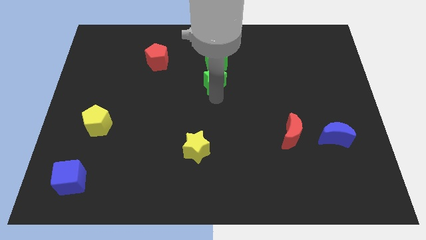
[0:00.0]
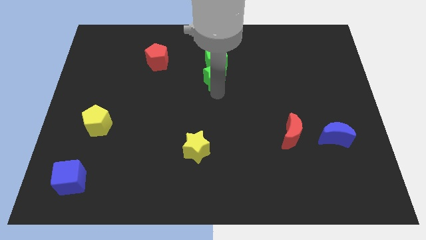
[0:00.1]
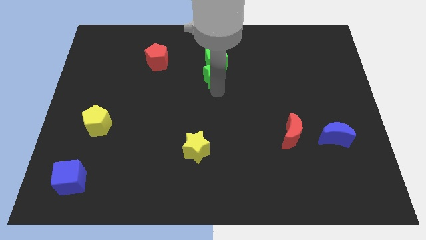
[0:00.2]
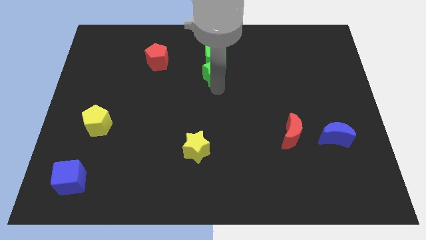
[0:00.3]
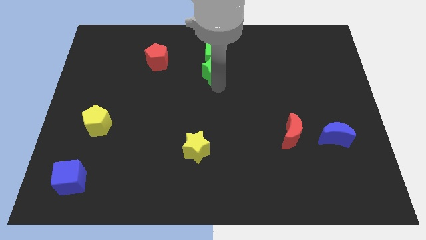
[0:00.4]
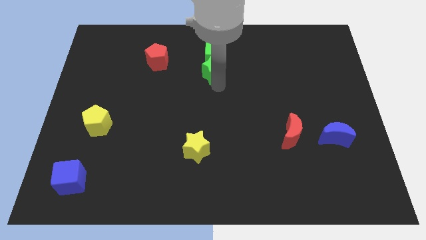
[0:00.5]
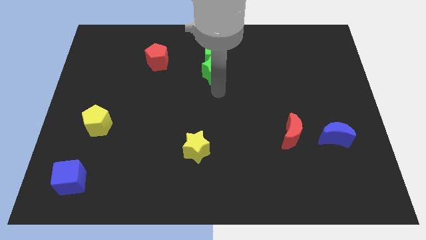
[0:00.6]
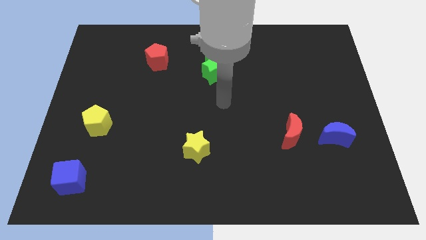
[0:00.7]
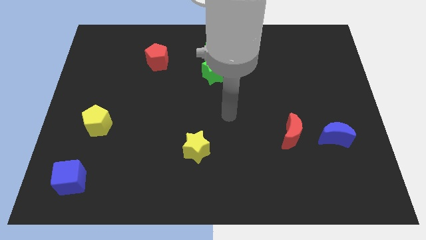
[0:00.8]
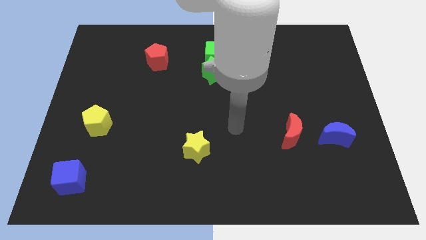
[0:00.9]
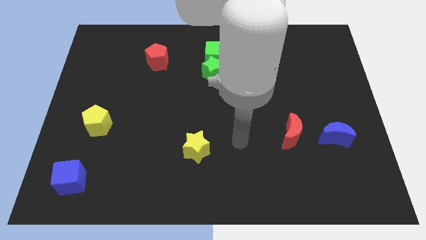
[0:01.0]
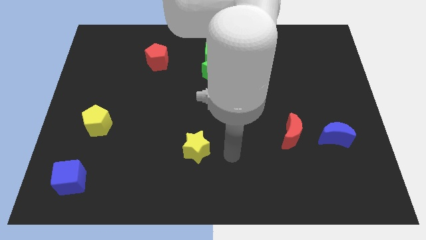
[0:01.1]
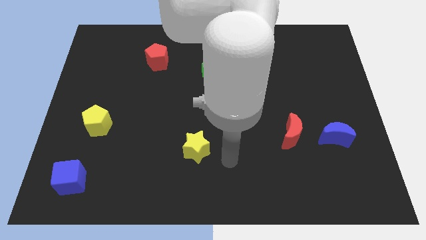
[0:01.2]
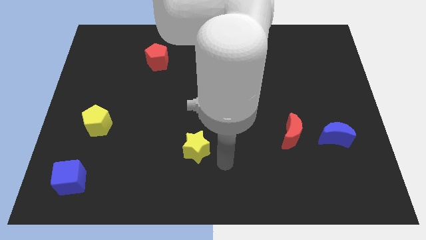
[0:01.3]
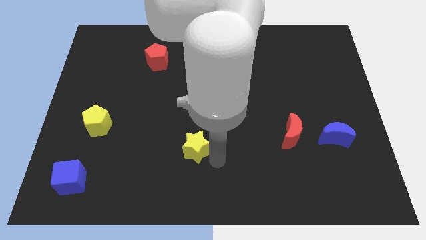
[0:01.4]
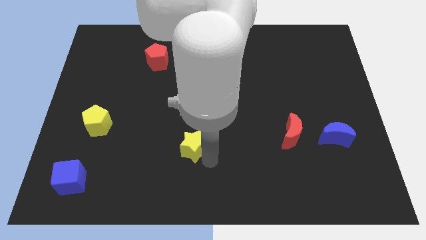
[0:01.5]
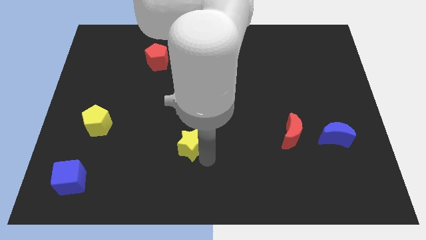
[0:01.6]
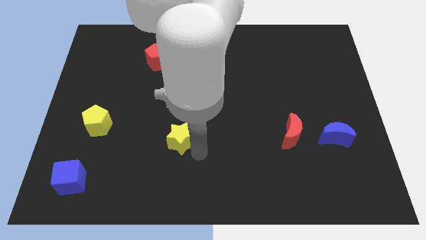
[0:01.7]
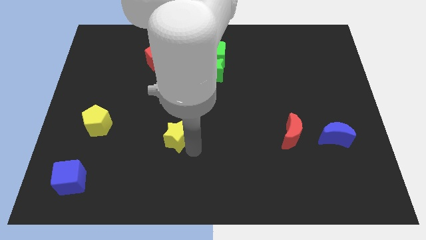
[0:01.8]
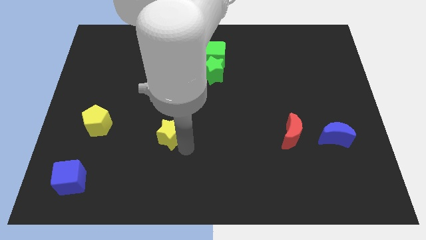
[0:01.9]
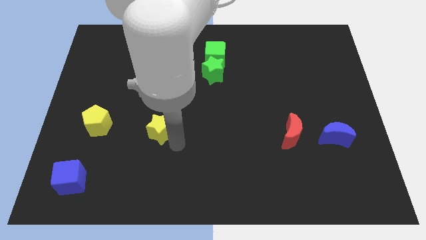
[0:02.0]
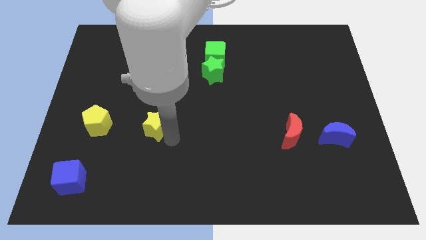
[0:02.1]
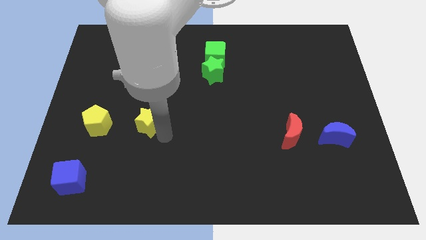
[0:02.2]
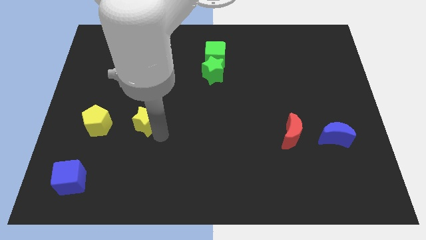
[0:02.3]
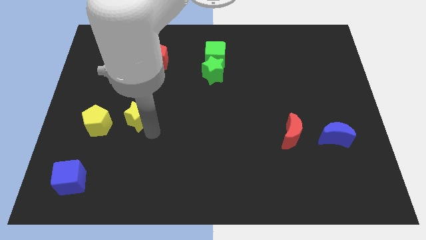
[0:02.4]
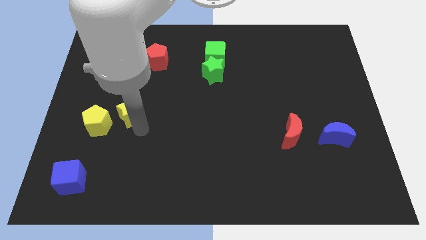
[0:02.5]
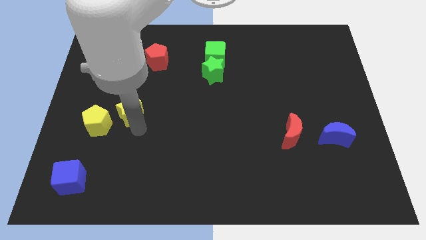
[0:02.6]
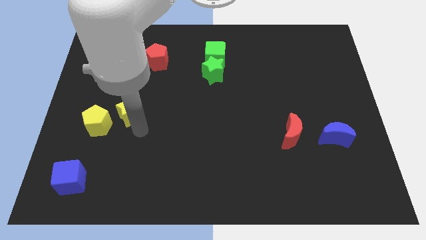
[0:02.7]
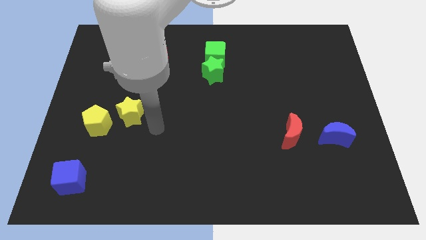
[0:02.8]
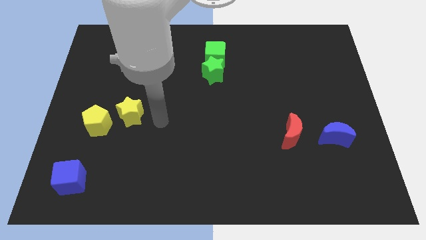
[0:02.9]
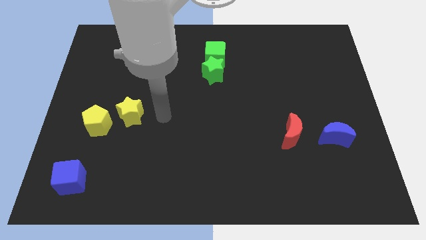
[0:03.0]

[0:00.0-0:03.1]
place the yellow star at the top right of yellow pentagon

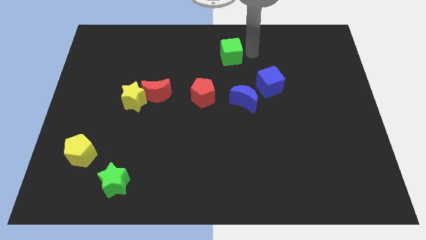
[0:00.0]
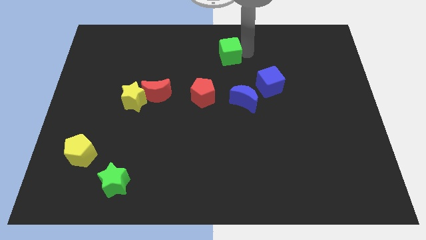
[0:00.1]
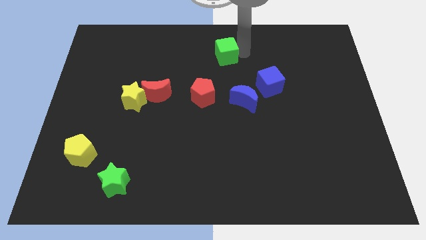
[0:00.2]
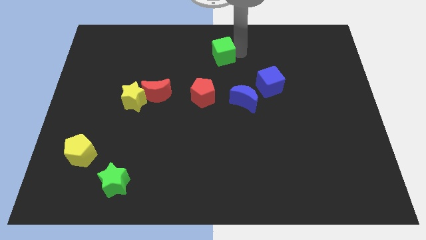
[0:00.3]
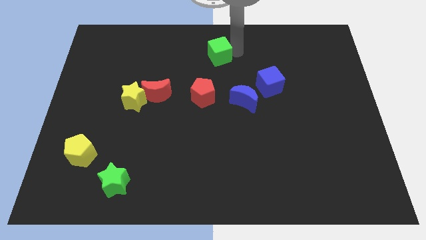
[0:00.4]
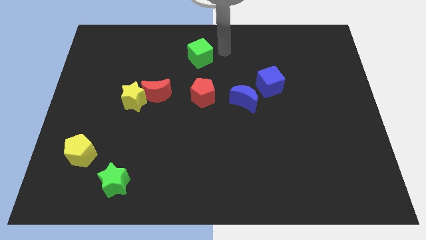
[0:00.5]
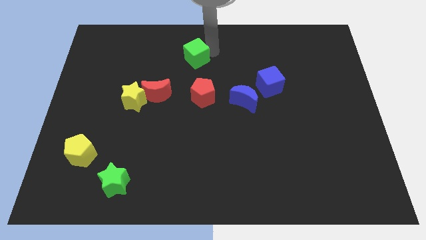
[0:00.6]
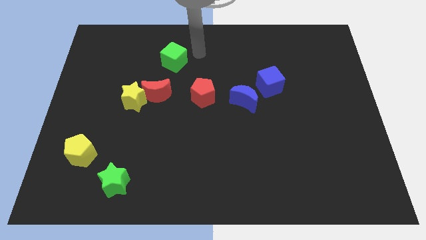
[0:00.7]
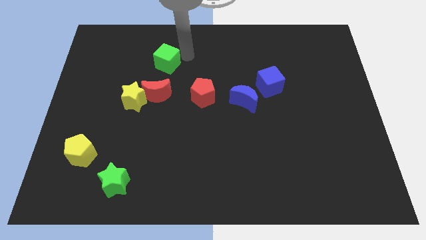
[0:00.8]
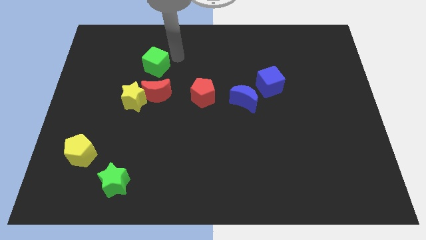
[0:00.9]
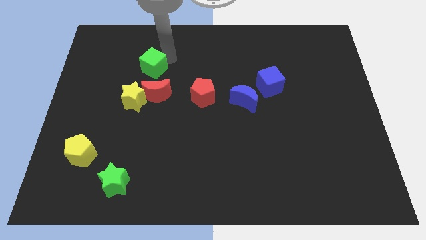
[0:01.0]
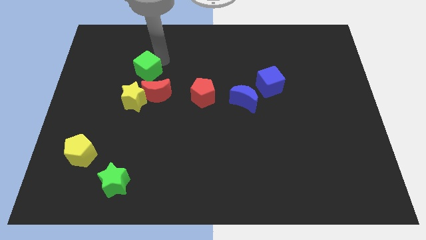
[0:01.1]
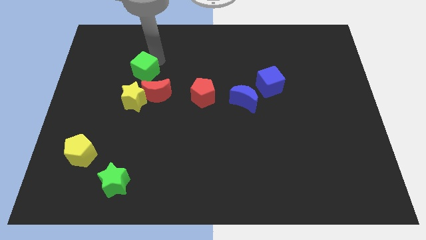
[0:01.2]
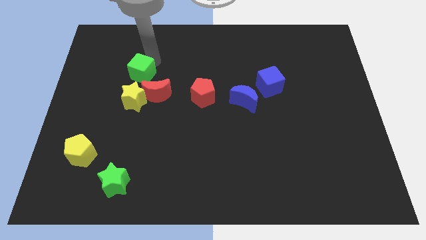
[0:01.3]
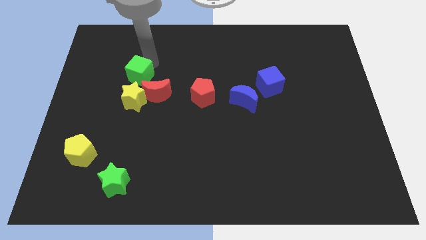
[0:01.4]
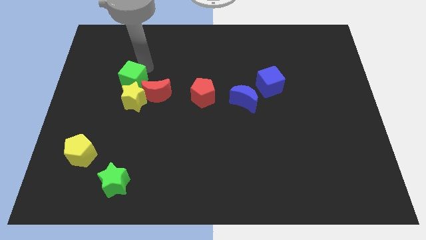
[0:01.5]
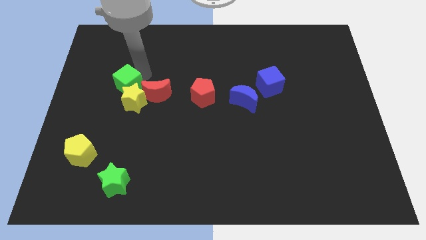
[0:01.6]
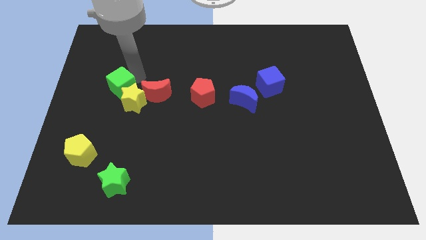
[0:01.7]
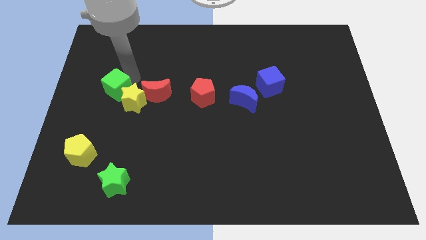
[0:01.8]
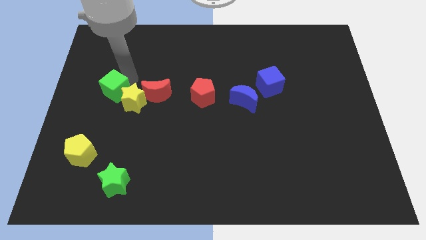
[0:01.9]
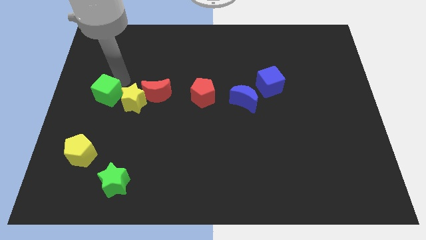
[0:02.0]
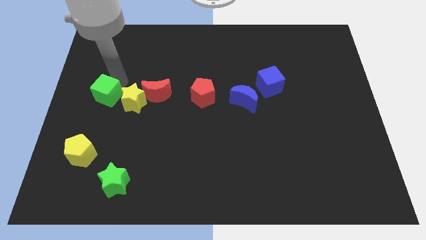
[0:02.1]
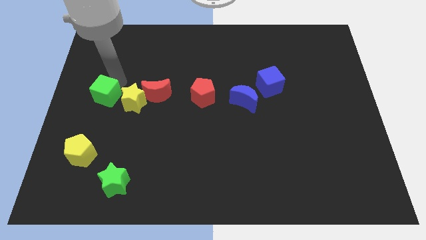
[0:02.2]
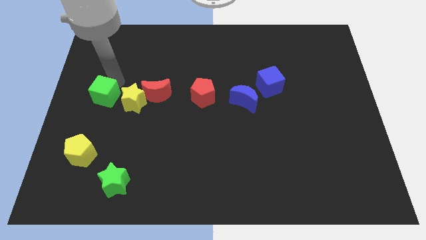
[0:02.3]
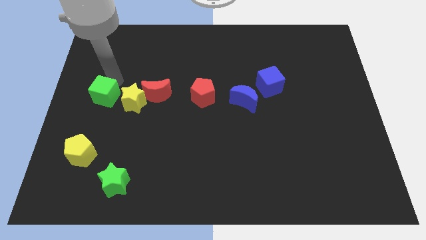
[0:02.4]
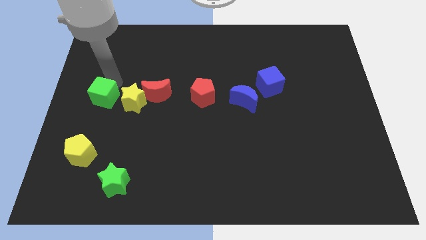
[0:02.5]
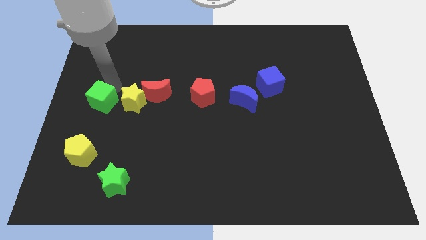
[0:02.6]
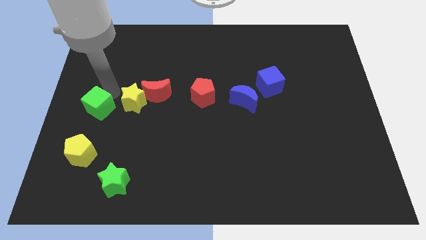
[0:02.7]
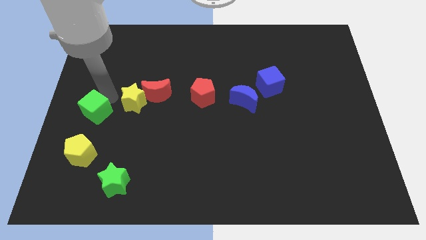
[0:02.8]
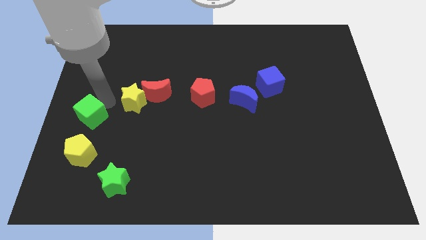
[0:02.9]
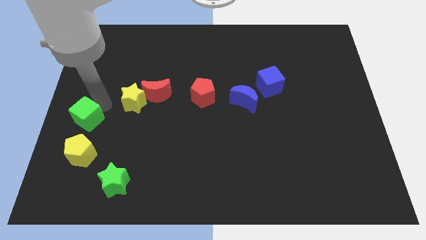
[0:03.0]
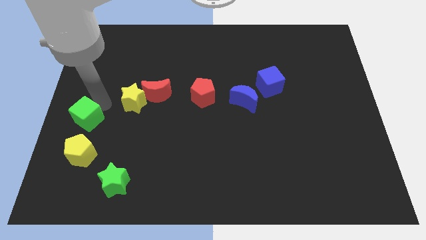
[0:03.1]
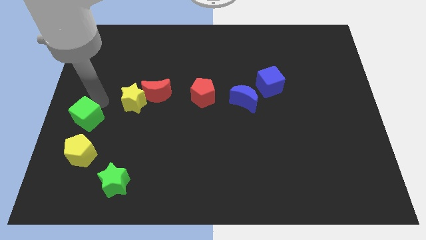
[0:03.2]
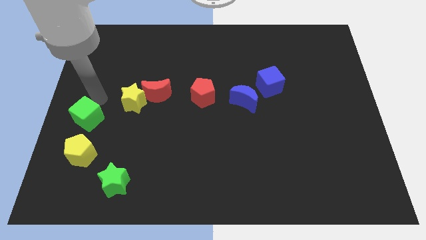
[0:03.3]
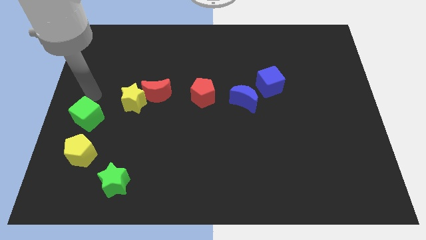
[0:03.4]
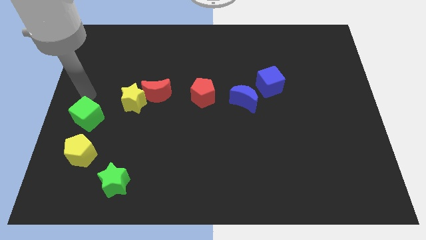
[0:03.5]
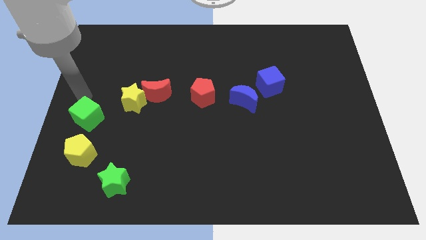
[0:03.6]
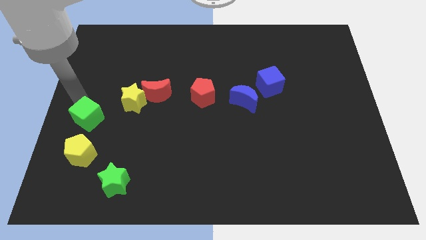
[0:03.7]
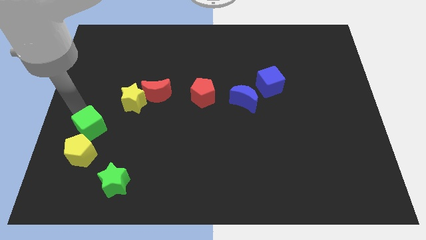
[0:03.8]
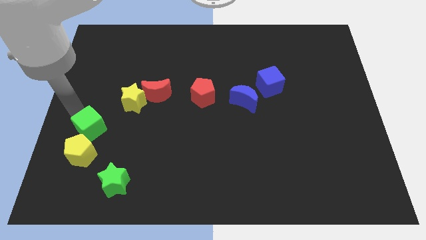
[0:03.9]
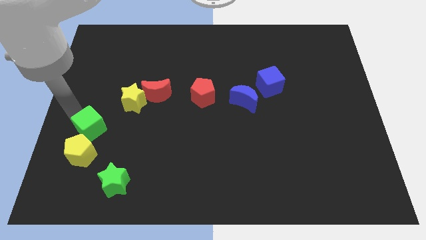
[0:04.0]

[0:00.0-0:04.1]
place green cube above the yellow pentagon

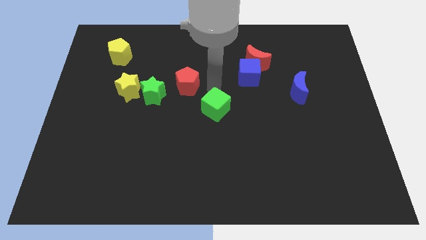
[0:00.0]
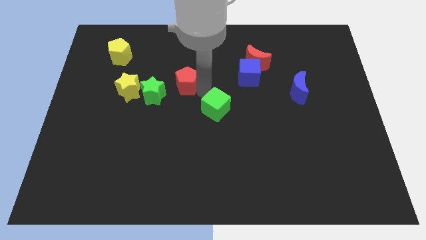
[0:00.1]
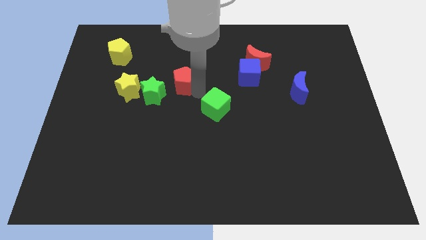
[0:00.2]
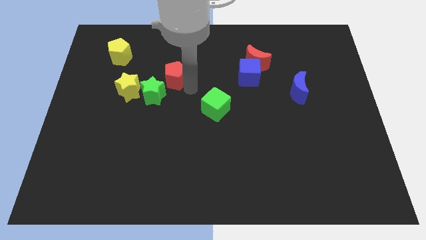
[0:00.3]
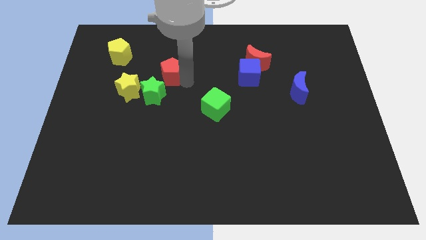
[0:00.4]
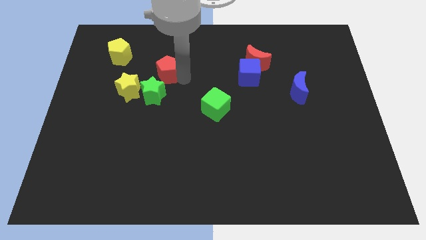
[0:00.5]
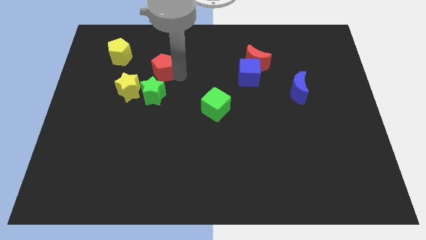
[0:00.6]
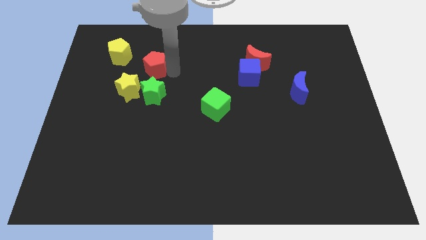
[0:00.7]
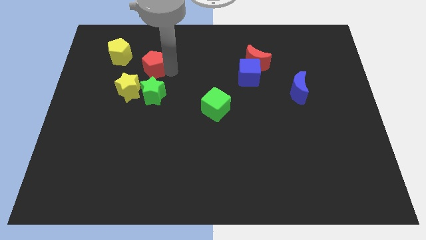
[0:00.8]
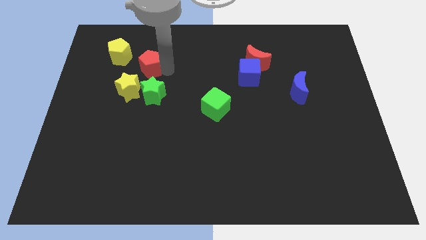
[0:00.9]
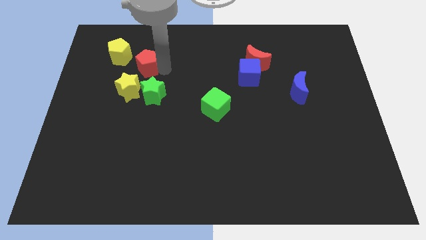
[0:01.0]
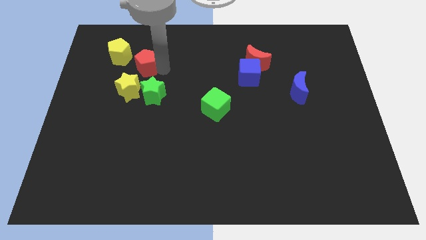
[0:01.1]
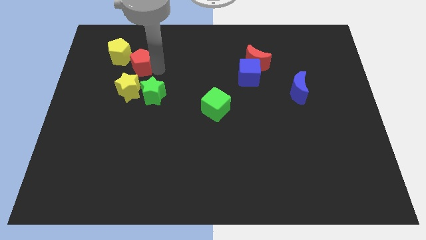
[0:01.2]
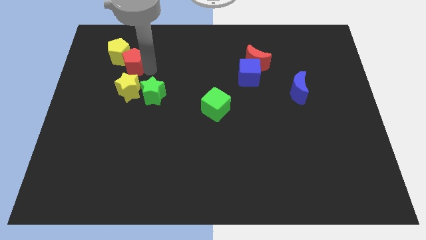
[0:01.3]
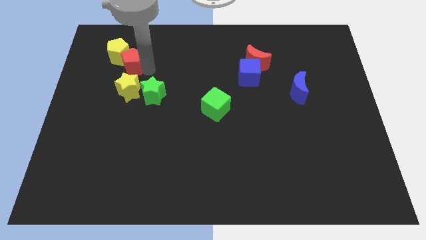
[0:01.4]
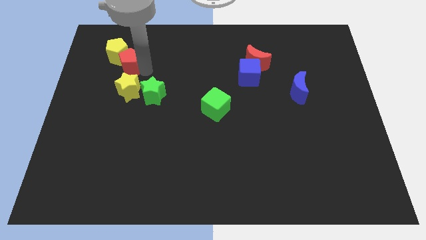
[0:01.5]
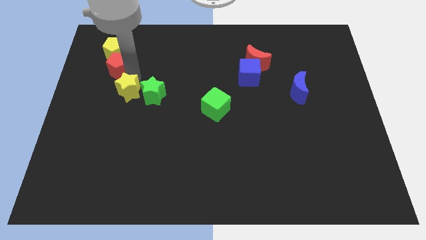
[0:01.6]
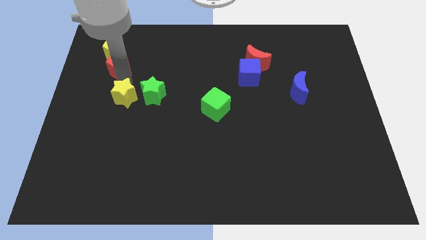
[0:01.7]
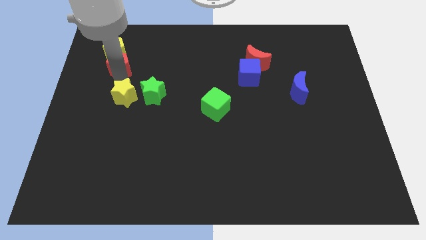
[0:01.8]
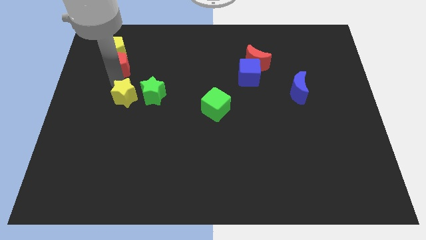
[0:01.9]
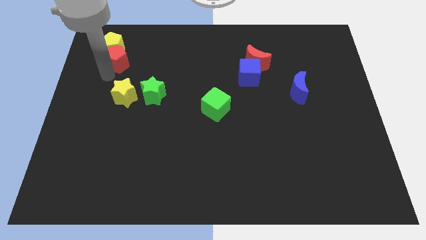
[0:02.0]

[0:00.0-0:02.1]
push yellow pentagon with the red pentagon
